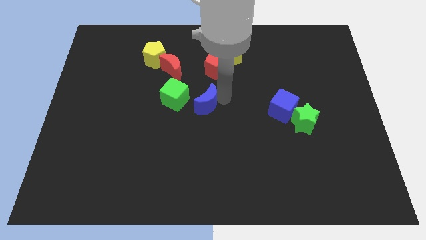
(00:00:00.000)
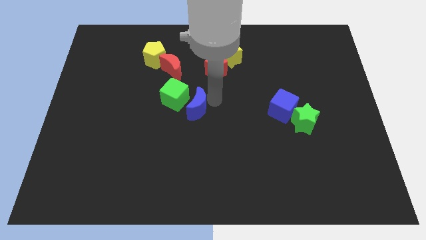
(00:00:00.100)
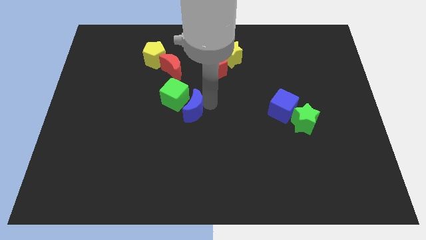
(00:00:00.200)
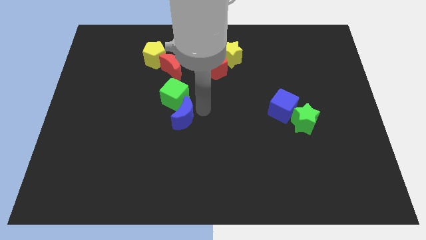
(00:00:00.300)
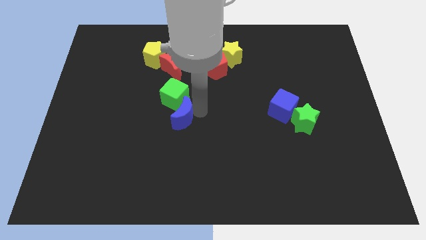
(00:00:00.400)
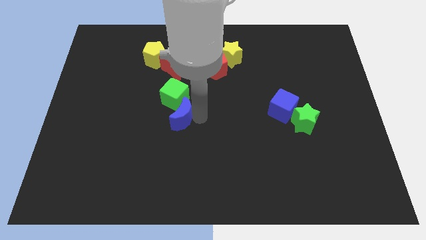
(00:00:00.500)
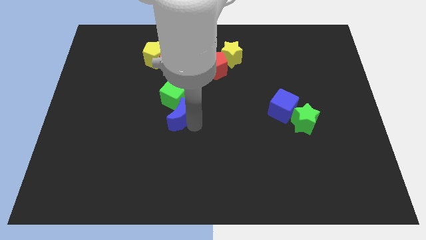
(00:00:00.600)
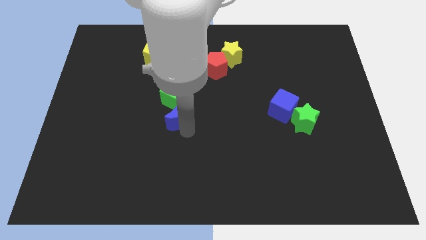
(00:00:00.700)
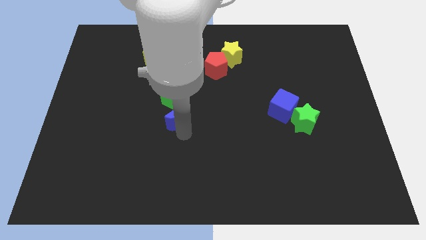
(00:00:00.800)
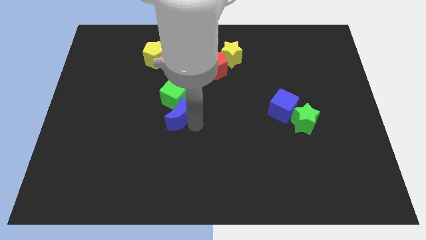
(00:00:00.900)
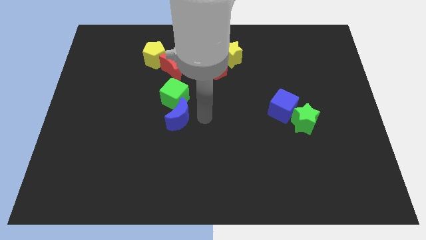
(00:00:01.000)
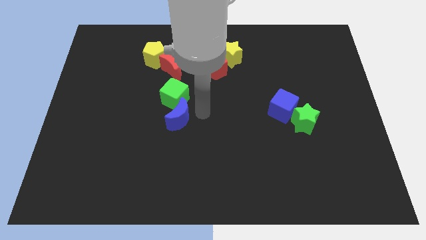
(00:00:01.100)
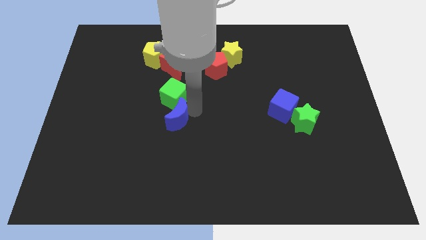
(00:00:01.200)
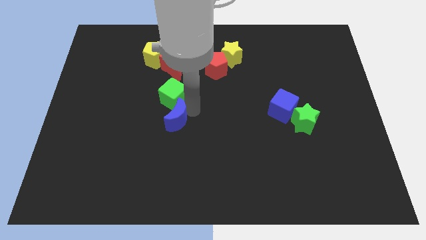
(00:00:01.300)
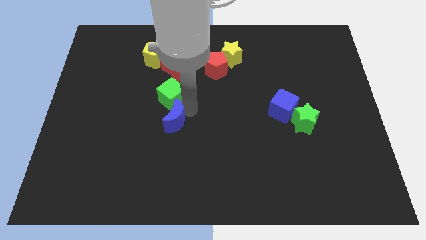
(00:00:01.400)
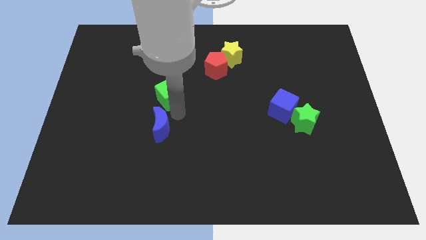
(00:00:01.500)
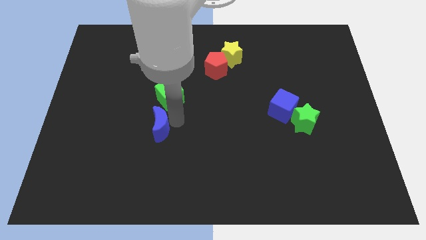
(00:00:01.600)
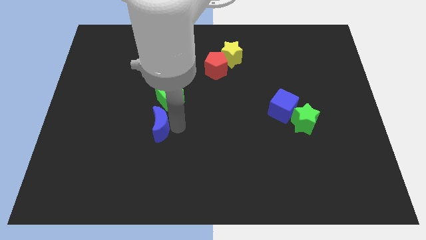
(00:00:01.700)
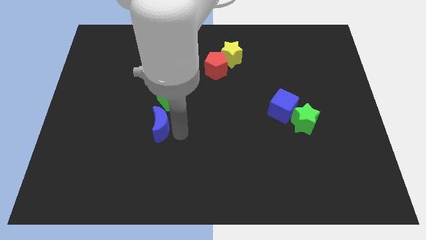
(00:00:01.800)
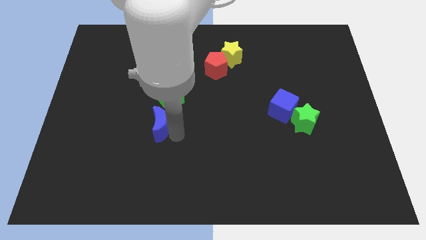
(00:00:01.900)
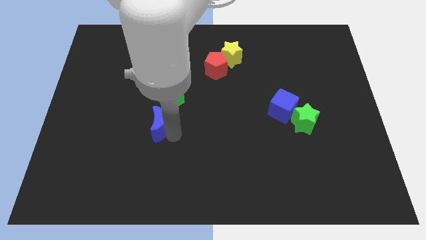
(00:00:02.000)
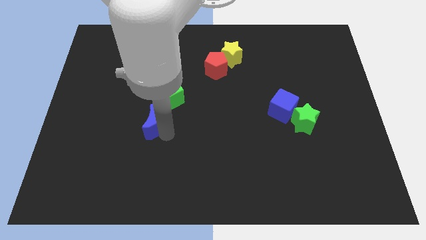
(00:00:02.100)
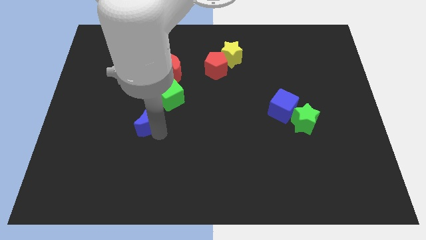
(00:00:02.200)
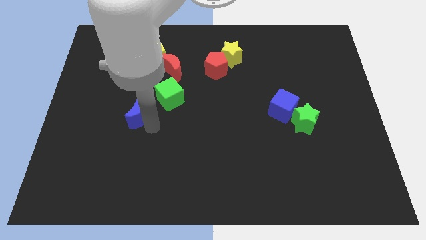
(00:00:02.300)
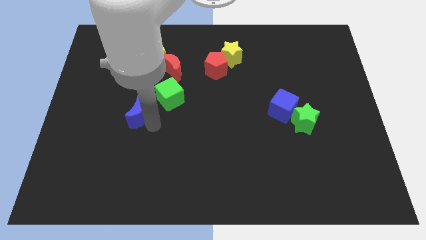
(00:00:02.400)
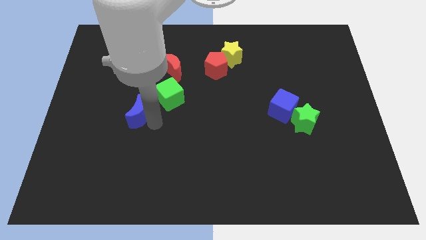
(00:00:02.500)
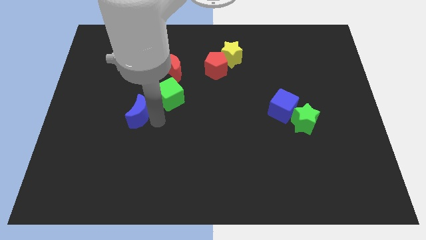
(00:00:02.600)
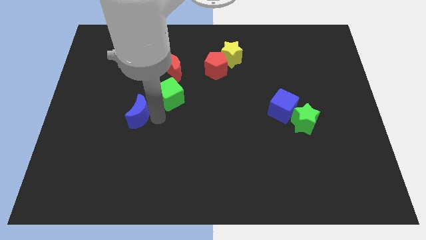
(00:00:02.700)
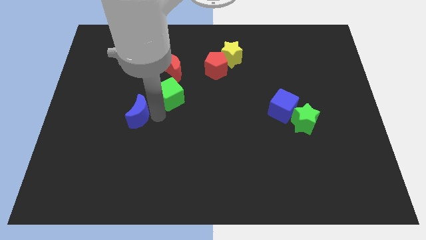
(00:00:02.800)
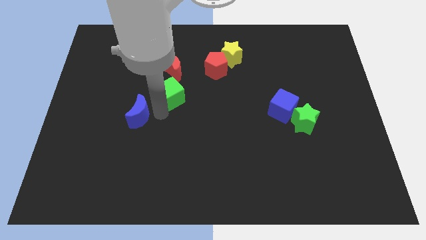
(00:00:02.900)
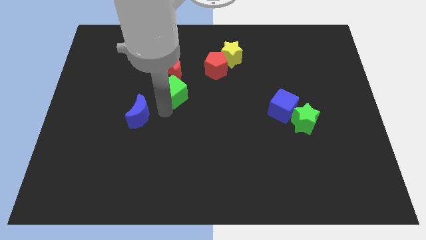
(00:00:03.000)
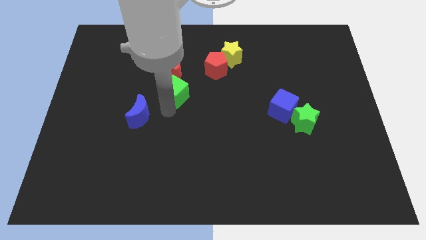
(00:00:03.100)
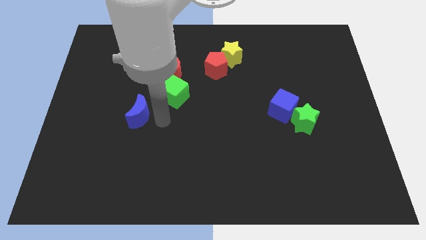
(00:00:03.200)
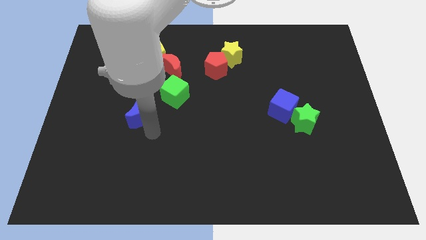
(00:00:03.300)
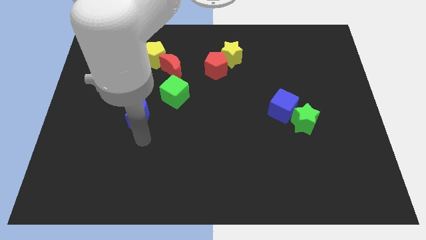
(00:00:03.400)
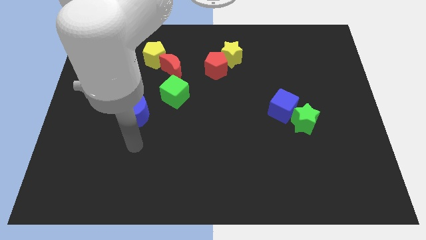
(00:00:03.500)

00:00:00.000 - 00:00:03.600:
push the blue moon diagonal to the green cube

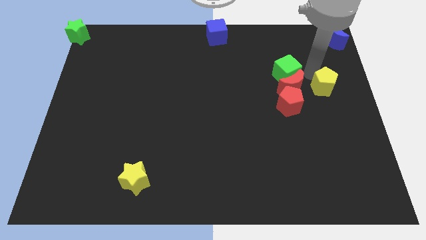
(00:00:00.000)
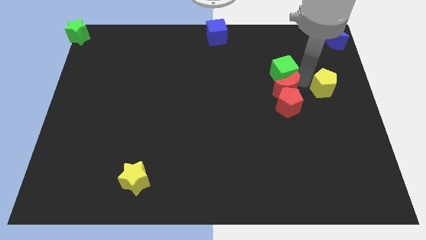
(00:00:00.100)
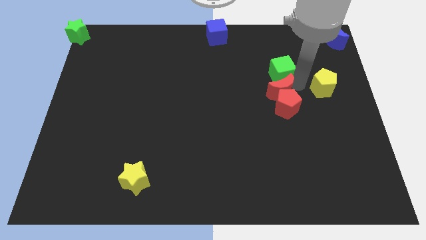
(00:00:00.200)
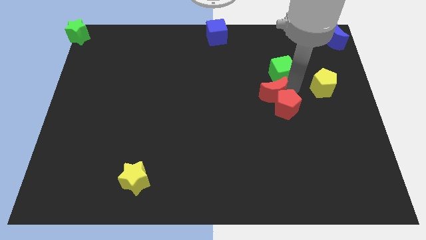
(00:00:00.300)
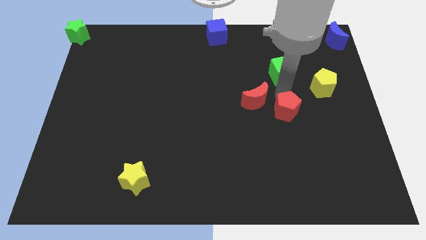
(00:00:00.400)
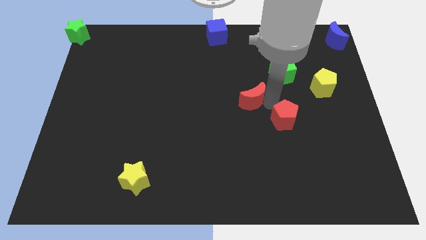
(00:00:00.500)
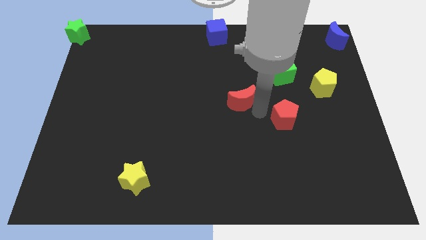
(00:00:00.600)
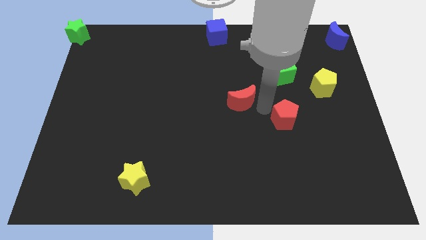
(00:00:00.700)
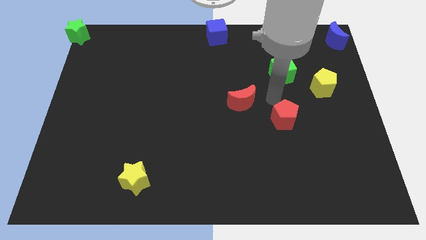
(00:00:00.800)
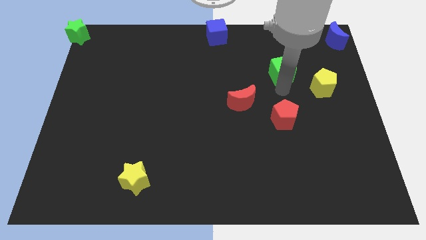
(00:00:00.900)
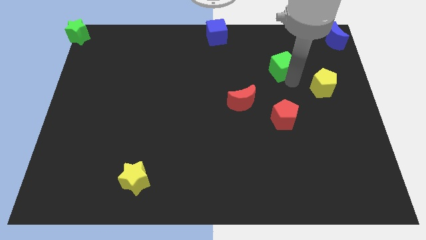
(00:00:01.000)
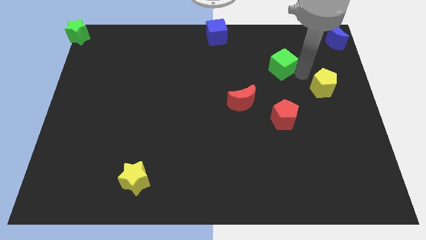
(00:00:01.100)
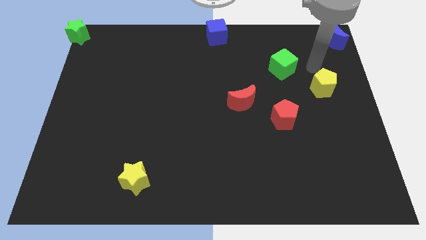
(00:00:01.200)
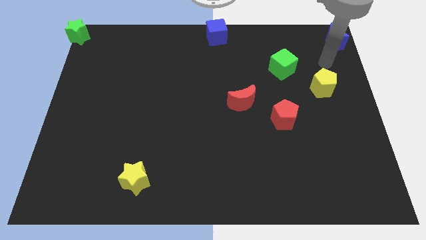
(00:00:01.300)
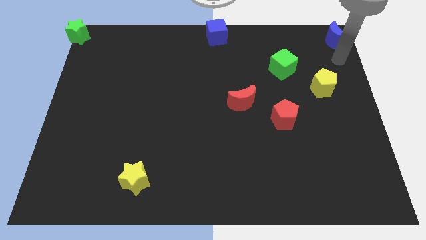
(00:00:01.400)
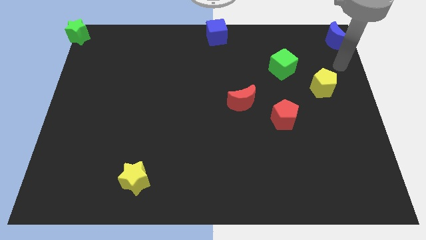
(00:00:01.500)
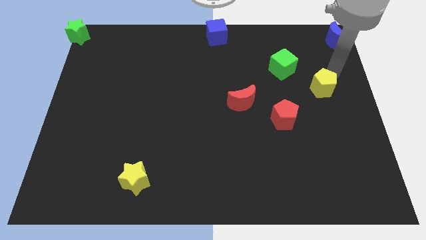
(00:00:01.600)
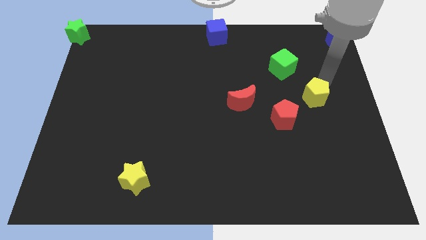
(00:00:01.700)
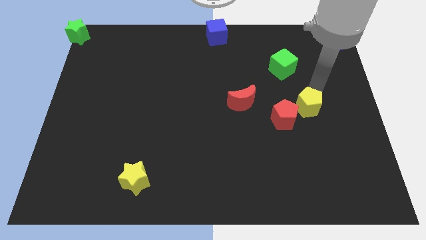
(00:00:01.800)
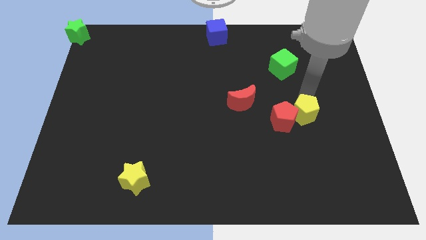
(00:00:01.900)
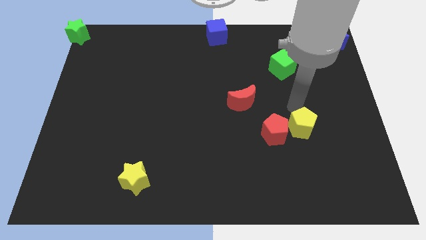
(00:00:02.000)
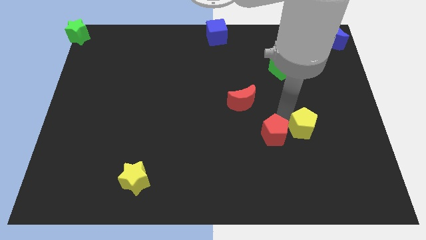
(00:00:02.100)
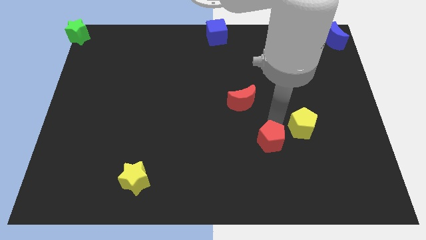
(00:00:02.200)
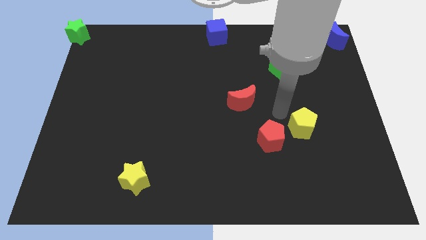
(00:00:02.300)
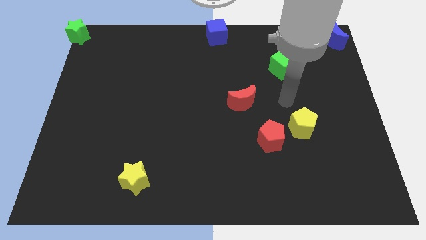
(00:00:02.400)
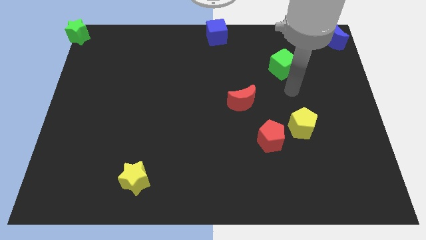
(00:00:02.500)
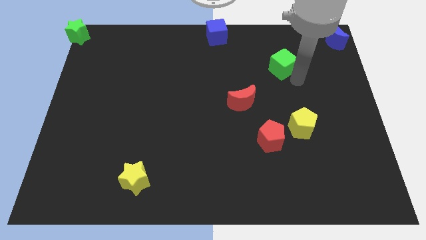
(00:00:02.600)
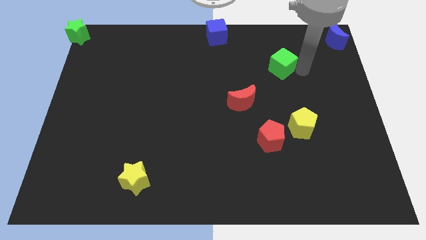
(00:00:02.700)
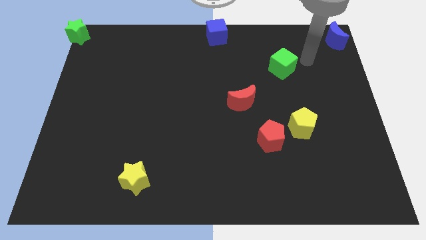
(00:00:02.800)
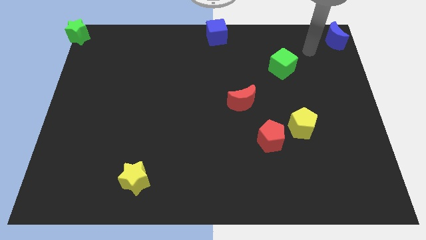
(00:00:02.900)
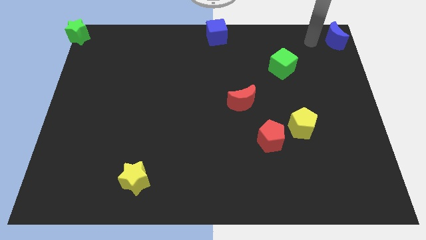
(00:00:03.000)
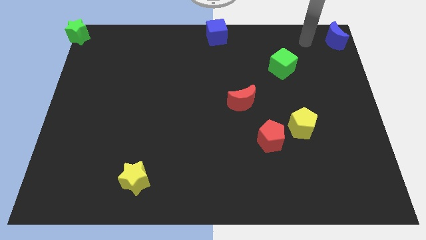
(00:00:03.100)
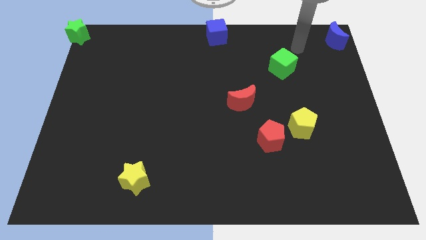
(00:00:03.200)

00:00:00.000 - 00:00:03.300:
seperate the group of blocks

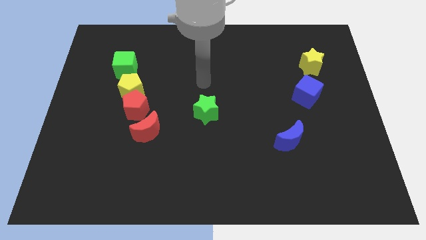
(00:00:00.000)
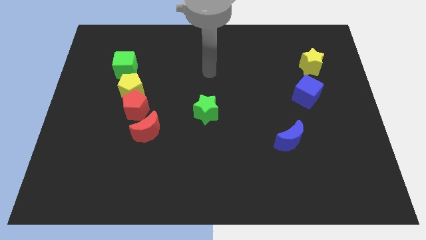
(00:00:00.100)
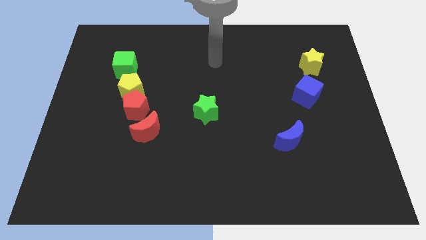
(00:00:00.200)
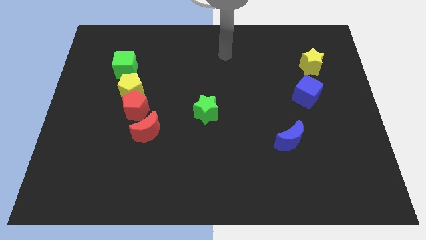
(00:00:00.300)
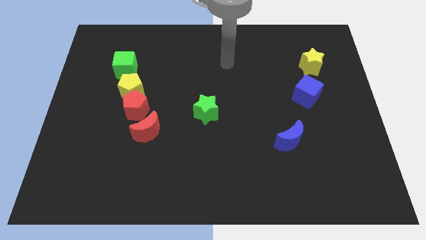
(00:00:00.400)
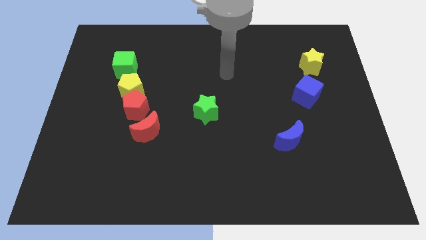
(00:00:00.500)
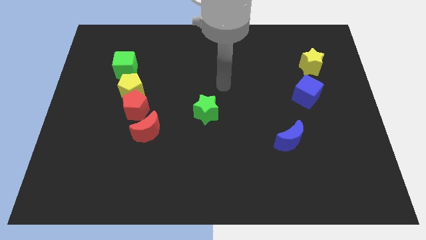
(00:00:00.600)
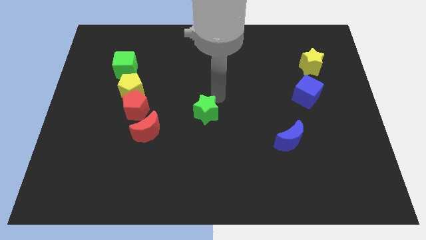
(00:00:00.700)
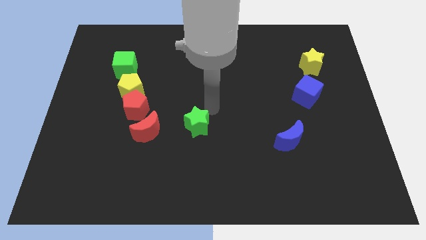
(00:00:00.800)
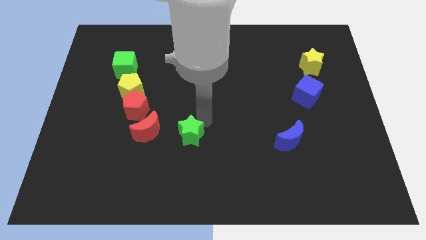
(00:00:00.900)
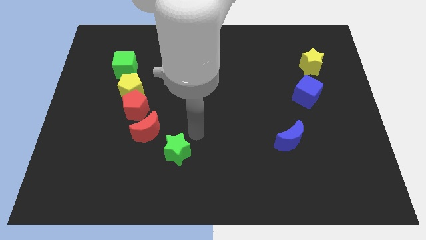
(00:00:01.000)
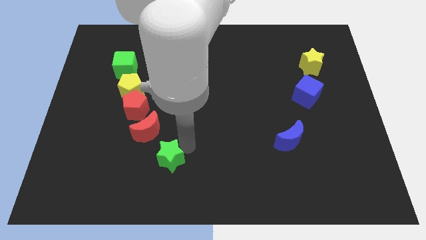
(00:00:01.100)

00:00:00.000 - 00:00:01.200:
push green star below red crescent

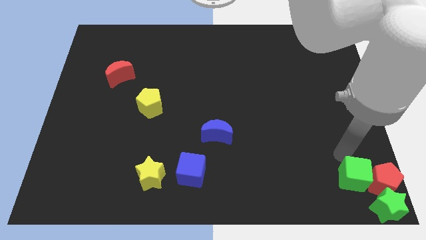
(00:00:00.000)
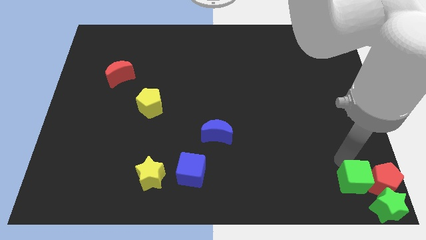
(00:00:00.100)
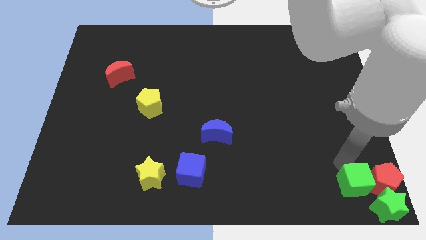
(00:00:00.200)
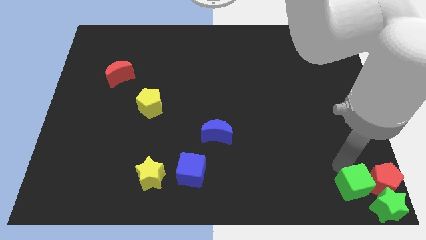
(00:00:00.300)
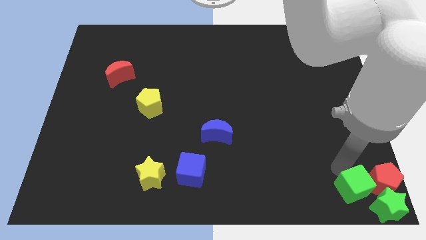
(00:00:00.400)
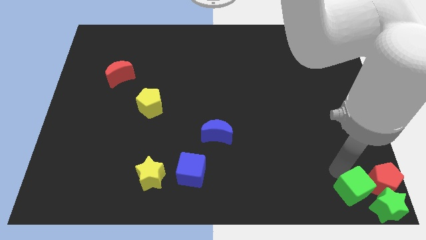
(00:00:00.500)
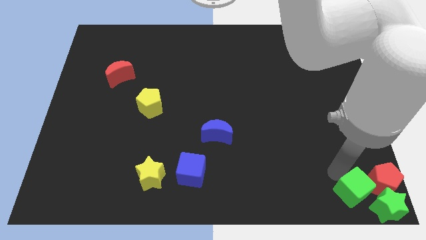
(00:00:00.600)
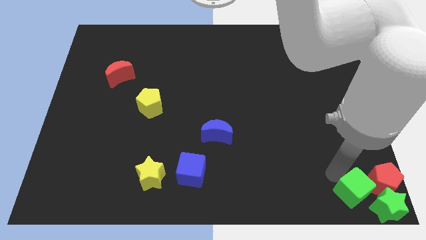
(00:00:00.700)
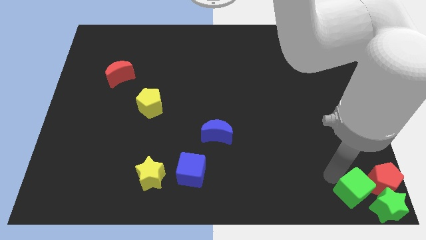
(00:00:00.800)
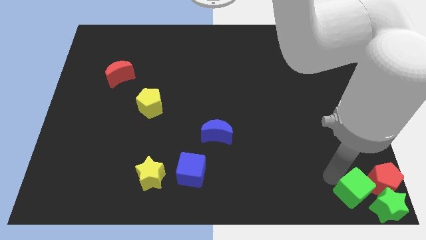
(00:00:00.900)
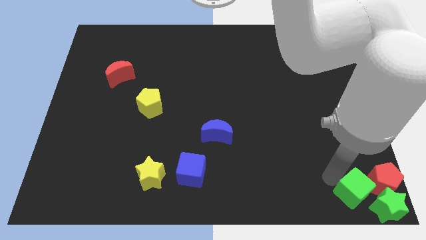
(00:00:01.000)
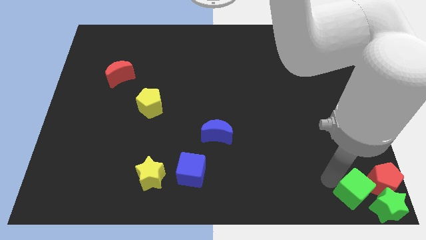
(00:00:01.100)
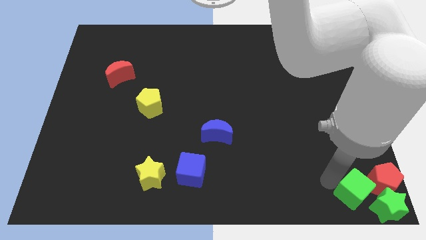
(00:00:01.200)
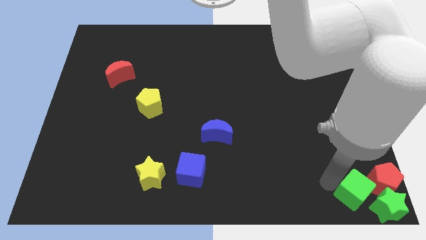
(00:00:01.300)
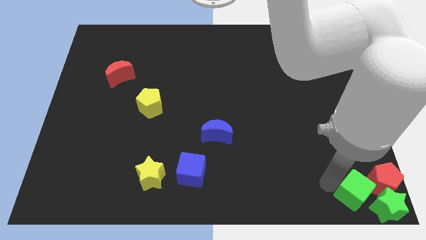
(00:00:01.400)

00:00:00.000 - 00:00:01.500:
move the green cube closer to the green star
